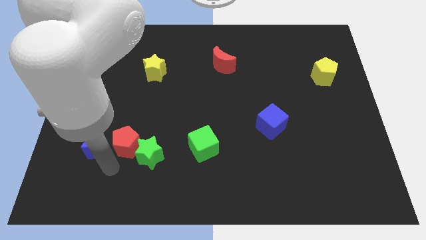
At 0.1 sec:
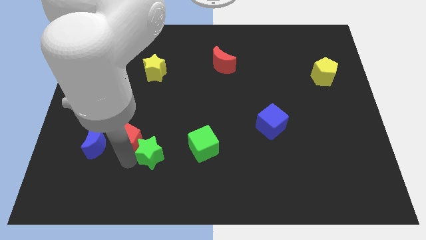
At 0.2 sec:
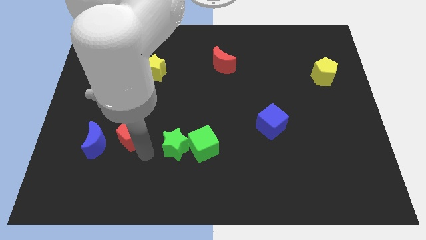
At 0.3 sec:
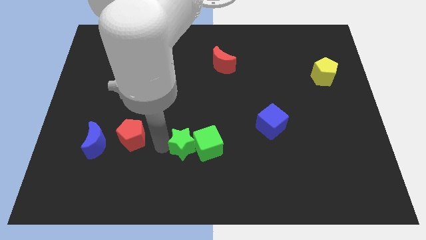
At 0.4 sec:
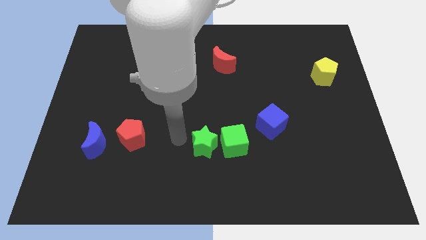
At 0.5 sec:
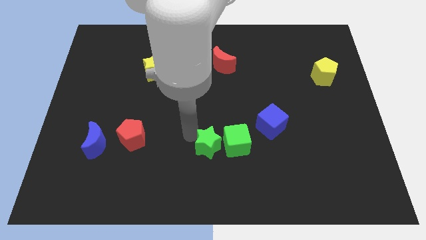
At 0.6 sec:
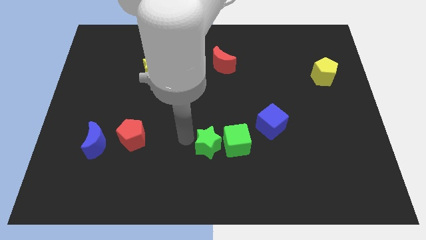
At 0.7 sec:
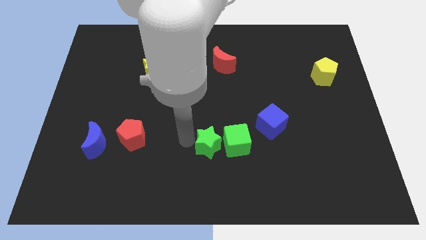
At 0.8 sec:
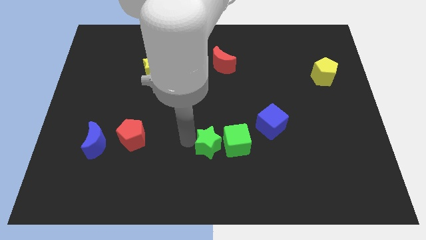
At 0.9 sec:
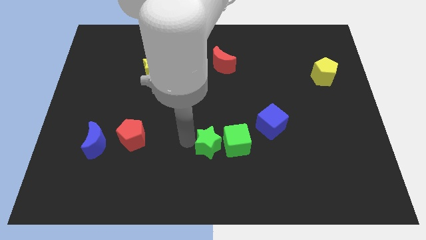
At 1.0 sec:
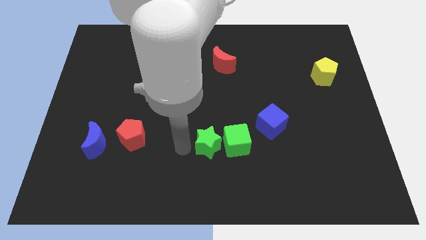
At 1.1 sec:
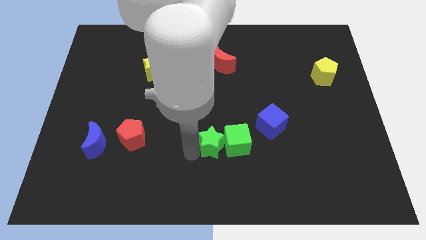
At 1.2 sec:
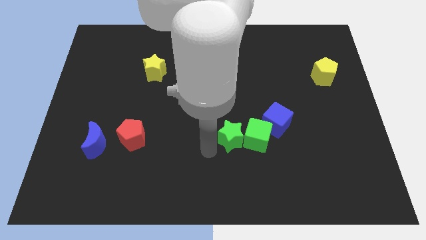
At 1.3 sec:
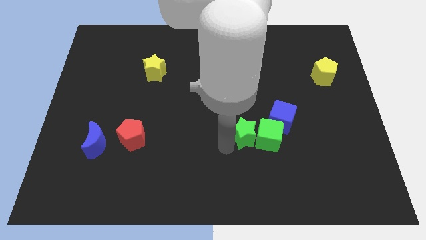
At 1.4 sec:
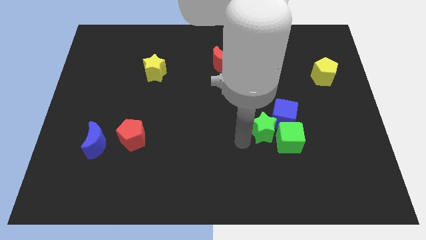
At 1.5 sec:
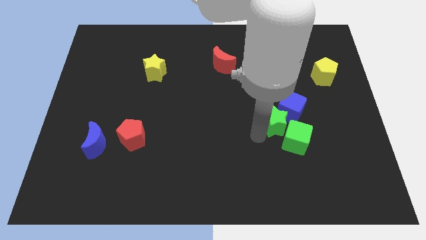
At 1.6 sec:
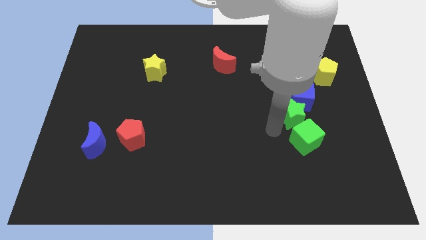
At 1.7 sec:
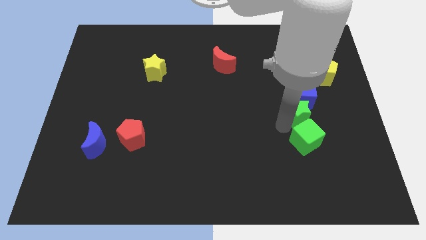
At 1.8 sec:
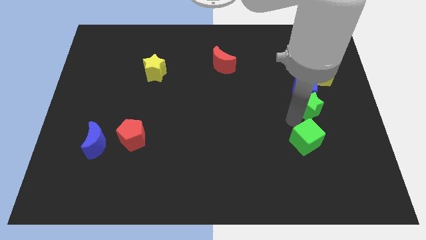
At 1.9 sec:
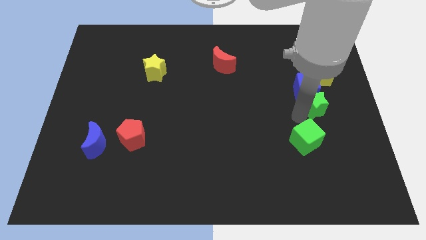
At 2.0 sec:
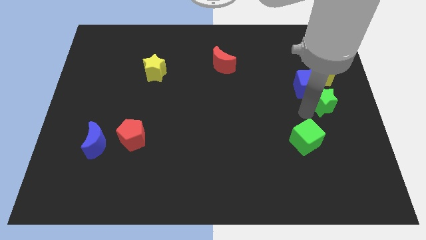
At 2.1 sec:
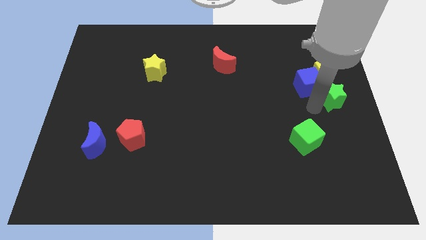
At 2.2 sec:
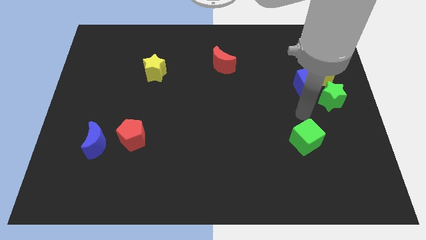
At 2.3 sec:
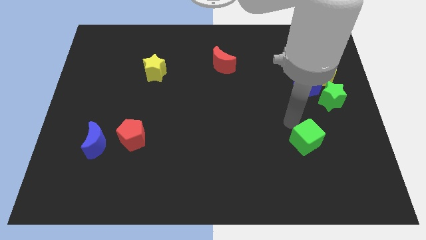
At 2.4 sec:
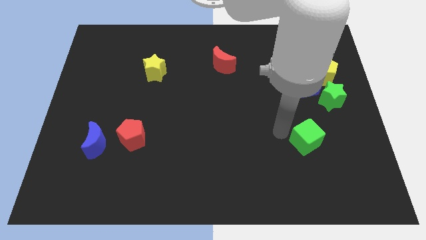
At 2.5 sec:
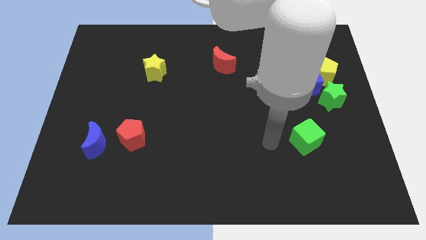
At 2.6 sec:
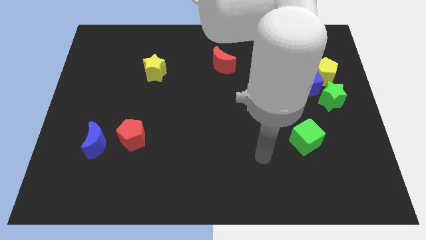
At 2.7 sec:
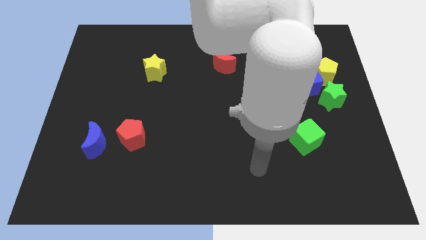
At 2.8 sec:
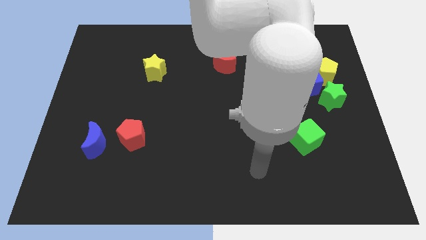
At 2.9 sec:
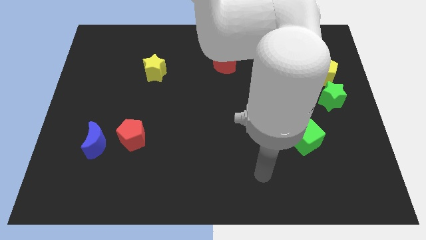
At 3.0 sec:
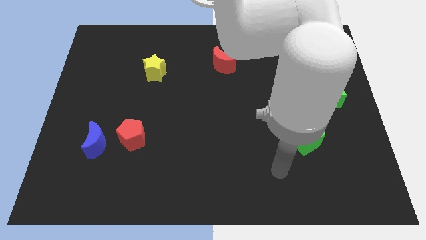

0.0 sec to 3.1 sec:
push the green star to the right center

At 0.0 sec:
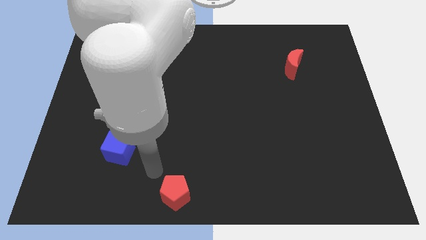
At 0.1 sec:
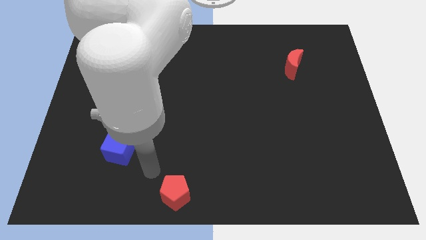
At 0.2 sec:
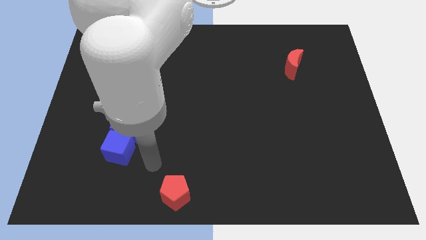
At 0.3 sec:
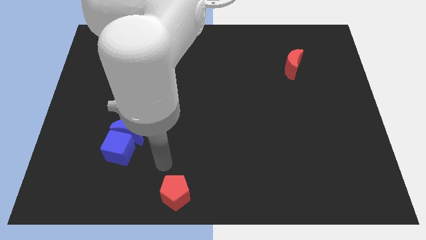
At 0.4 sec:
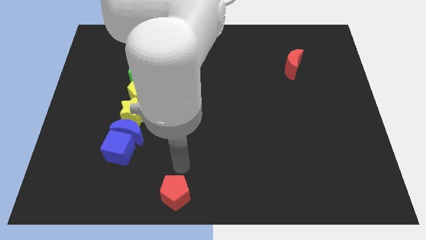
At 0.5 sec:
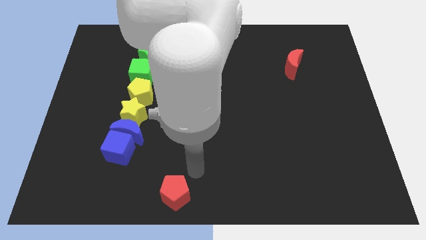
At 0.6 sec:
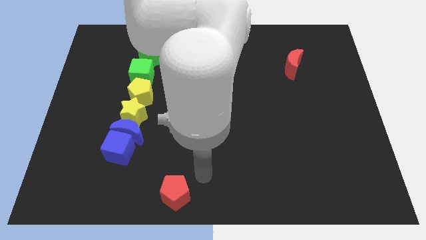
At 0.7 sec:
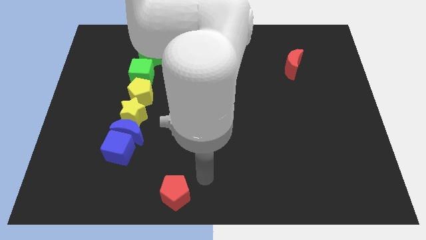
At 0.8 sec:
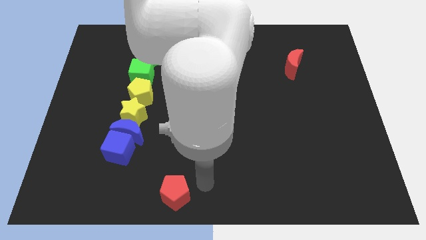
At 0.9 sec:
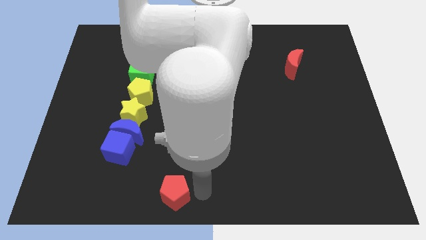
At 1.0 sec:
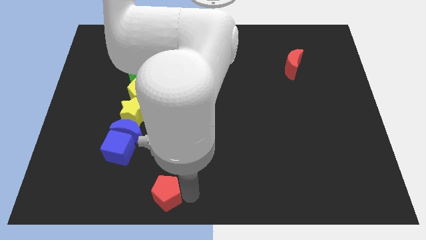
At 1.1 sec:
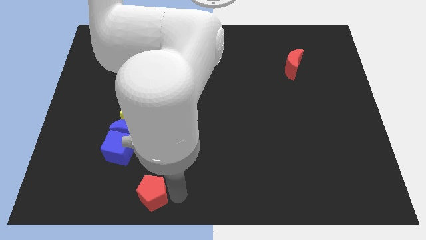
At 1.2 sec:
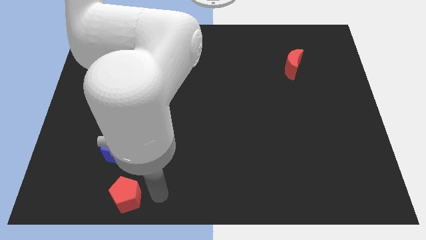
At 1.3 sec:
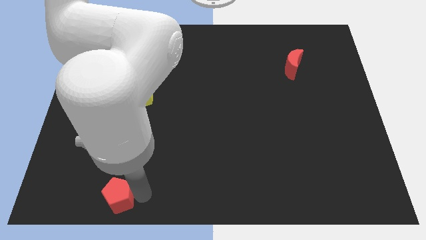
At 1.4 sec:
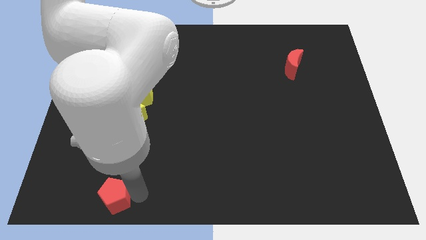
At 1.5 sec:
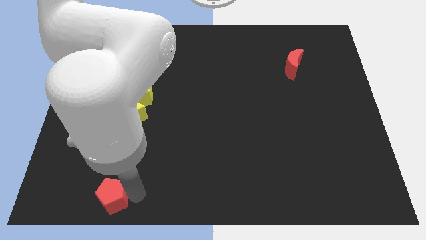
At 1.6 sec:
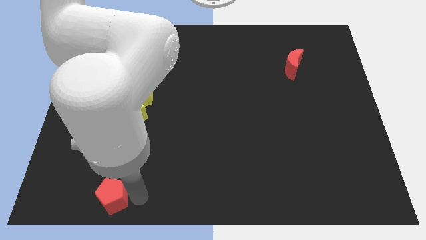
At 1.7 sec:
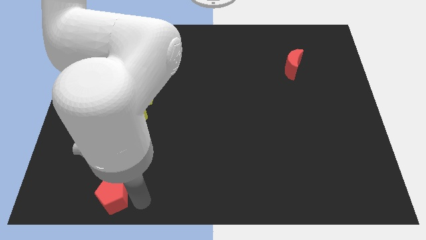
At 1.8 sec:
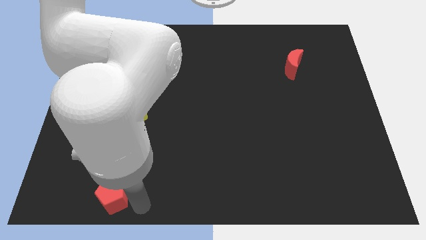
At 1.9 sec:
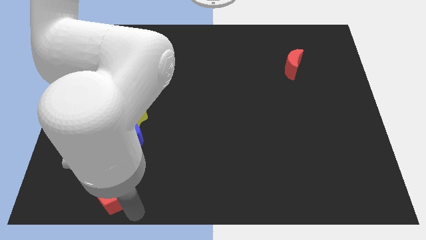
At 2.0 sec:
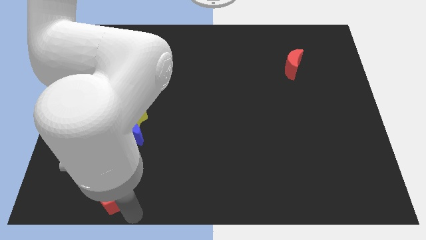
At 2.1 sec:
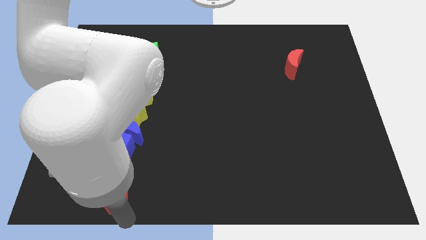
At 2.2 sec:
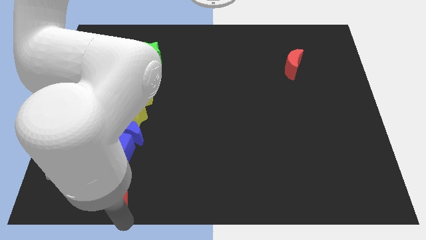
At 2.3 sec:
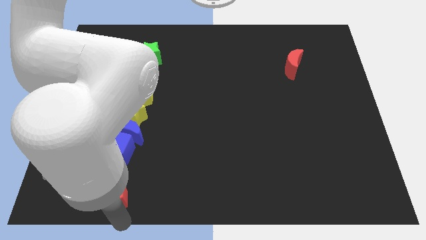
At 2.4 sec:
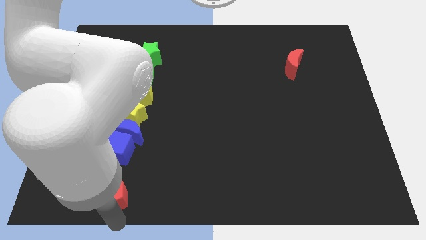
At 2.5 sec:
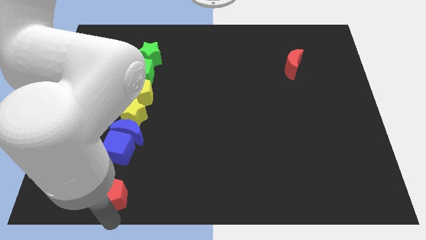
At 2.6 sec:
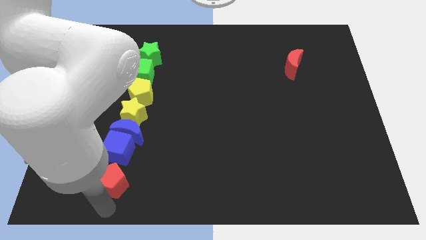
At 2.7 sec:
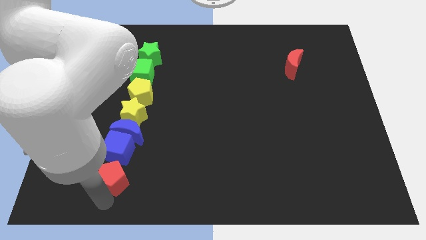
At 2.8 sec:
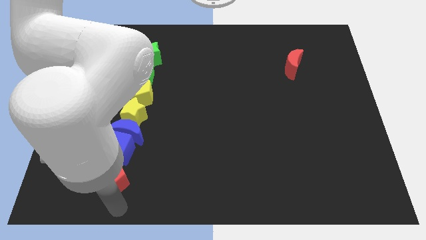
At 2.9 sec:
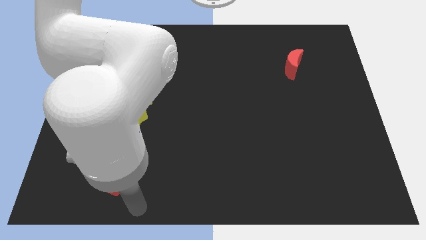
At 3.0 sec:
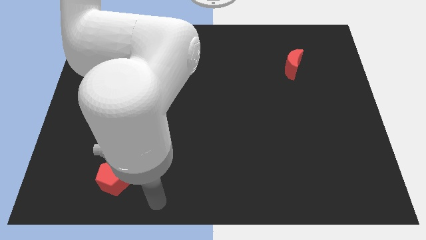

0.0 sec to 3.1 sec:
move the red pentagon below the blue cube

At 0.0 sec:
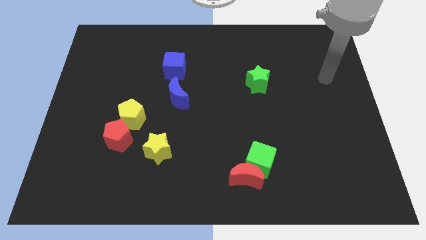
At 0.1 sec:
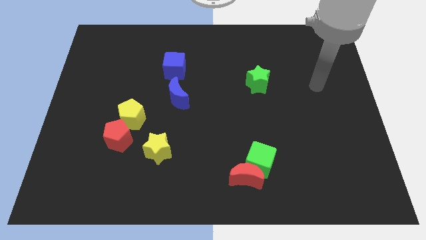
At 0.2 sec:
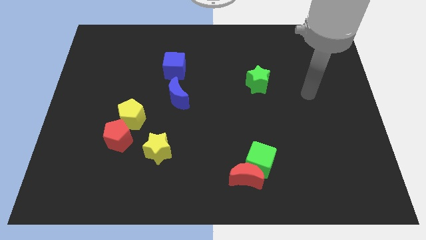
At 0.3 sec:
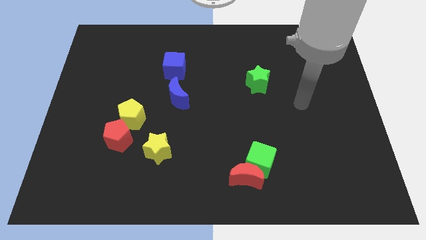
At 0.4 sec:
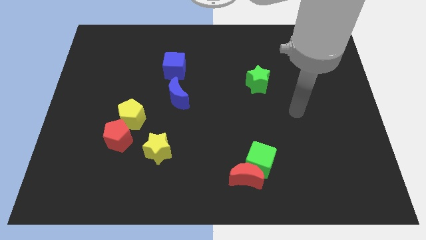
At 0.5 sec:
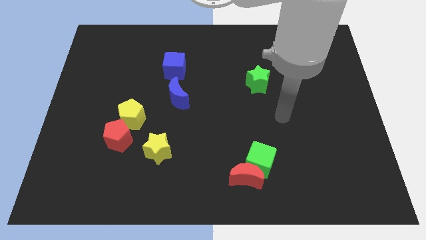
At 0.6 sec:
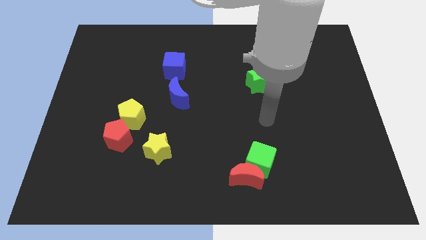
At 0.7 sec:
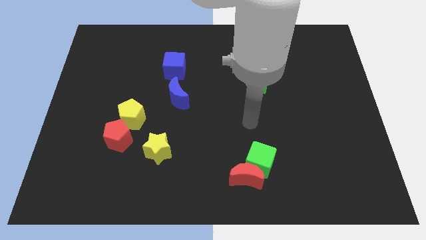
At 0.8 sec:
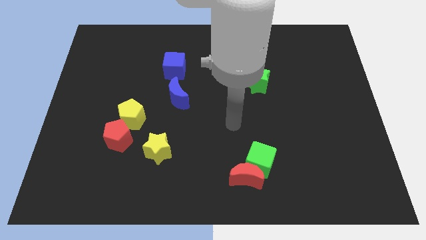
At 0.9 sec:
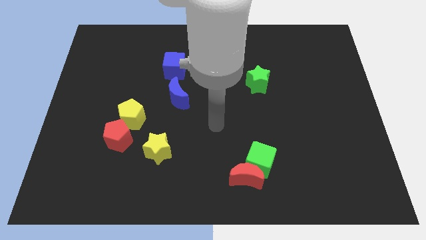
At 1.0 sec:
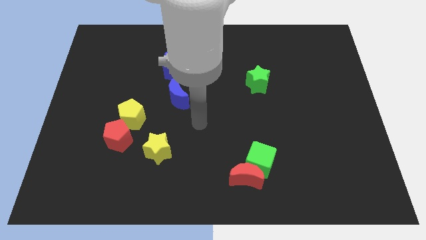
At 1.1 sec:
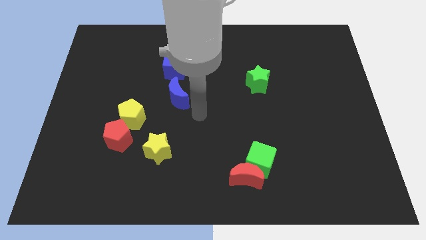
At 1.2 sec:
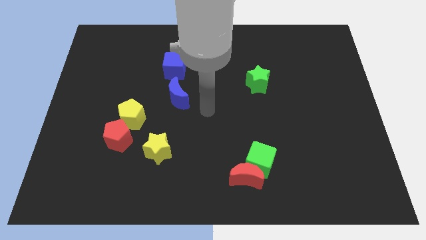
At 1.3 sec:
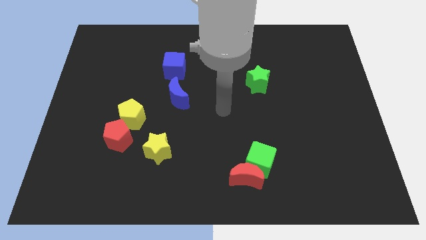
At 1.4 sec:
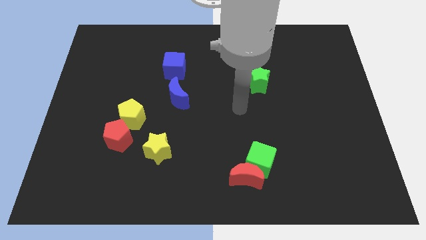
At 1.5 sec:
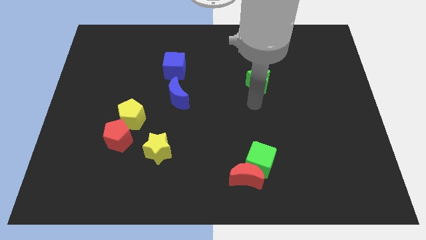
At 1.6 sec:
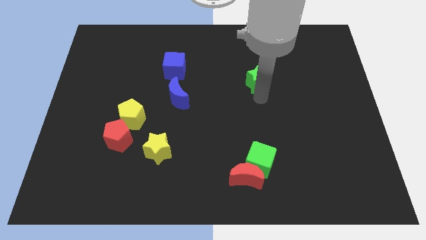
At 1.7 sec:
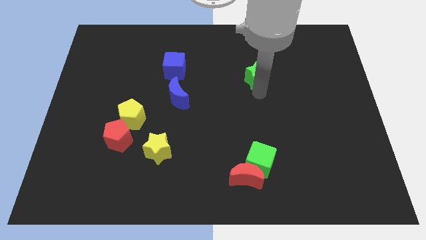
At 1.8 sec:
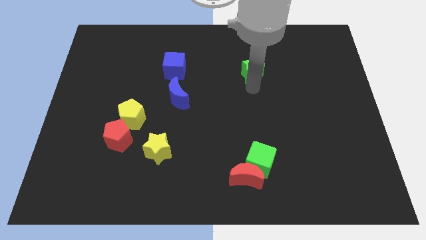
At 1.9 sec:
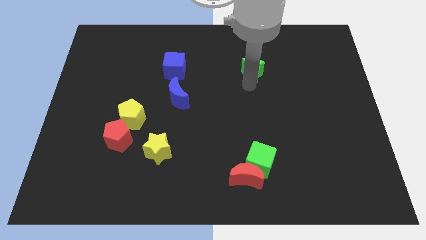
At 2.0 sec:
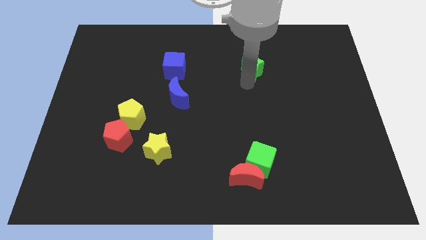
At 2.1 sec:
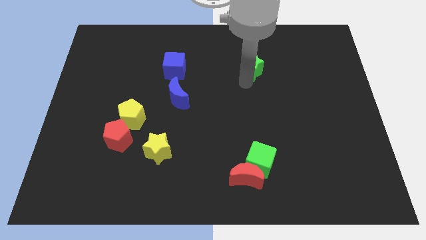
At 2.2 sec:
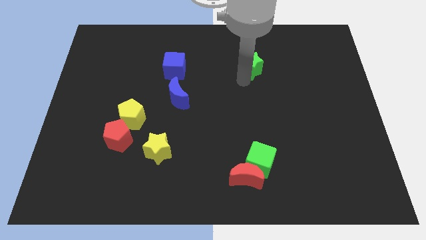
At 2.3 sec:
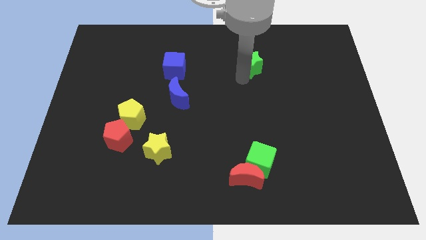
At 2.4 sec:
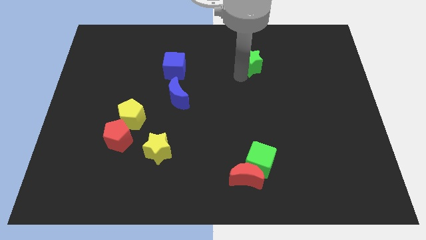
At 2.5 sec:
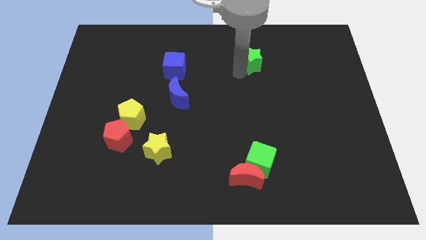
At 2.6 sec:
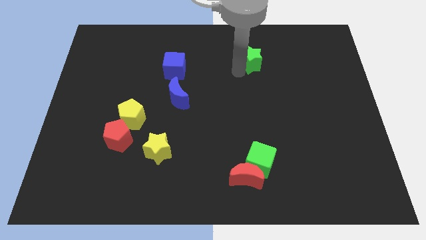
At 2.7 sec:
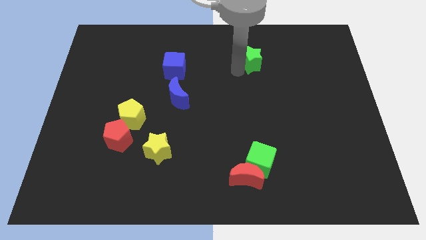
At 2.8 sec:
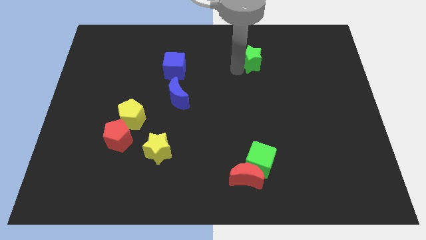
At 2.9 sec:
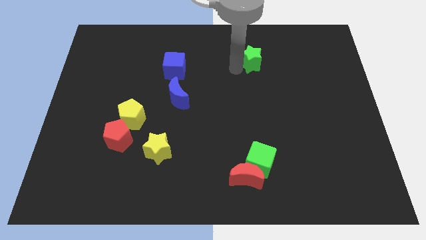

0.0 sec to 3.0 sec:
place the green star right to the blue cube
